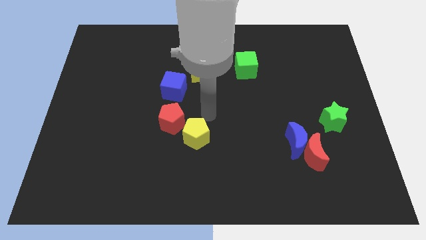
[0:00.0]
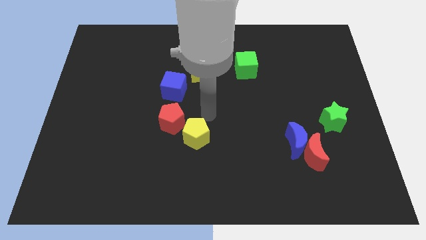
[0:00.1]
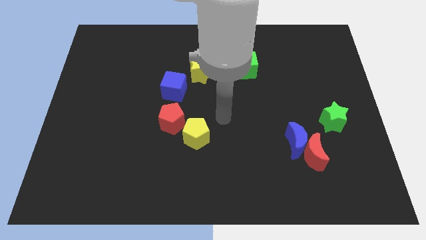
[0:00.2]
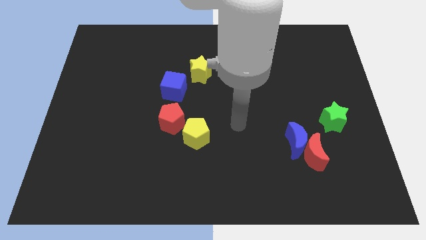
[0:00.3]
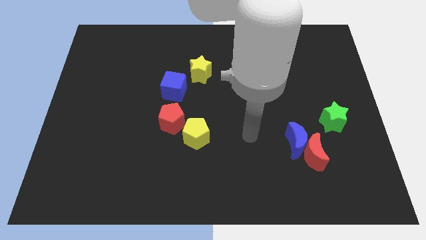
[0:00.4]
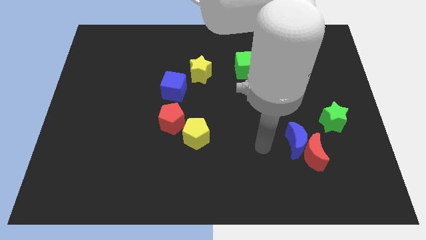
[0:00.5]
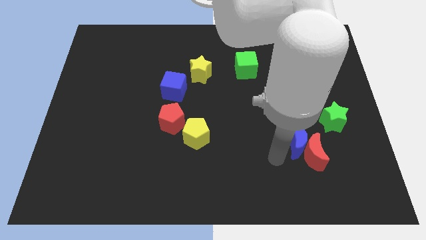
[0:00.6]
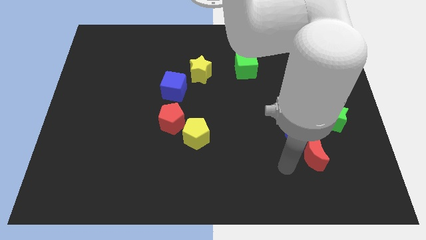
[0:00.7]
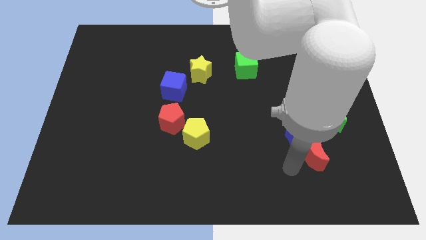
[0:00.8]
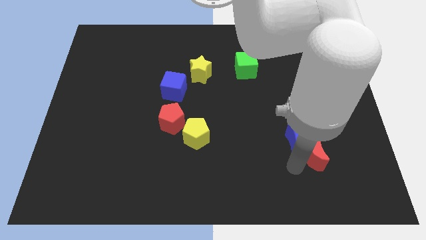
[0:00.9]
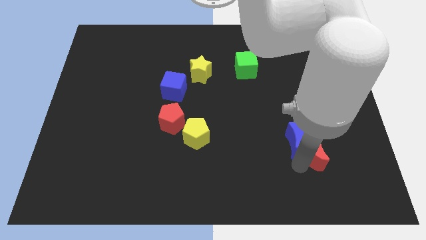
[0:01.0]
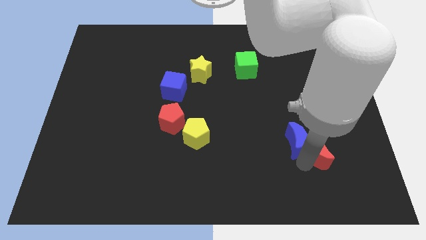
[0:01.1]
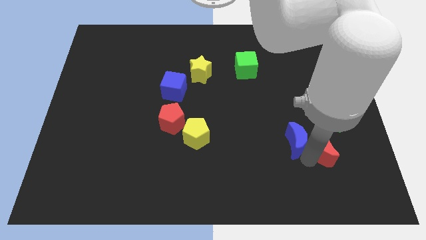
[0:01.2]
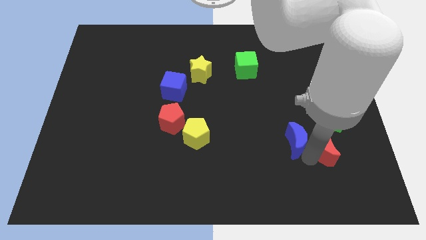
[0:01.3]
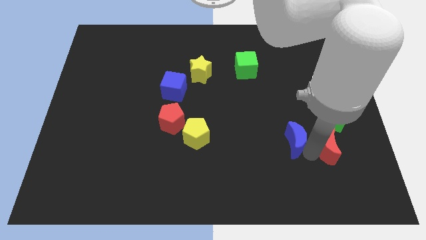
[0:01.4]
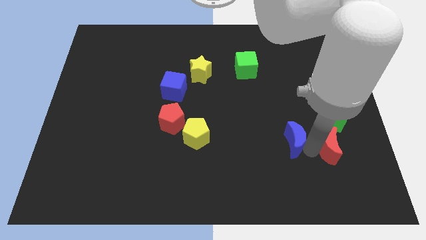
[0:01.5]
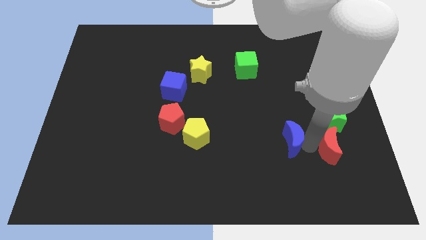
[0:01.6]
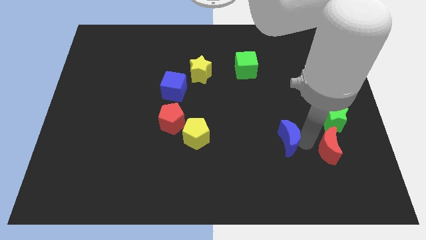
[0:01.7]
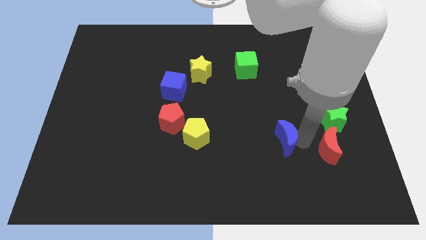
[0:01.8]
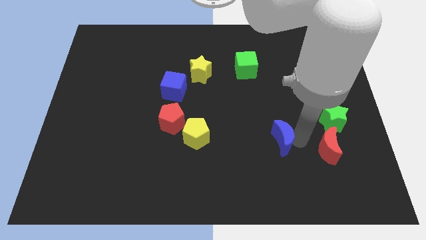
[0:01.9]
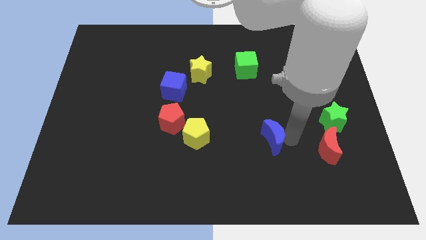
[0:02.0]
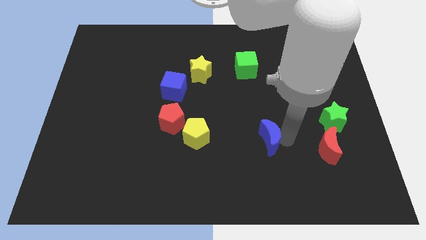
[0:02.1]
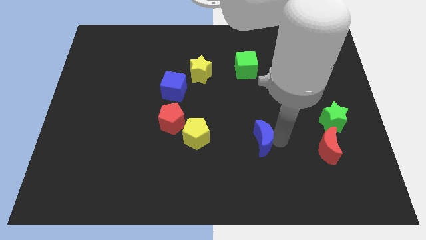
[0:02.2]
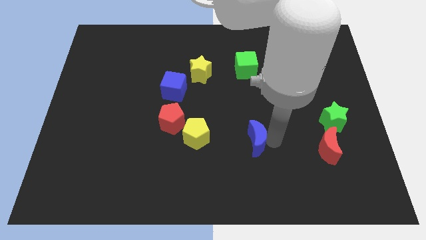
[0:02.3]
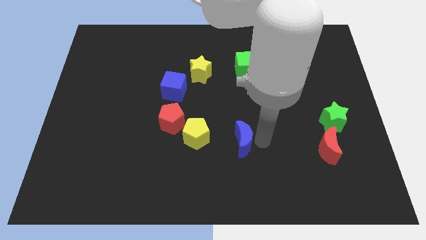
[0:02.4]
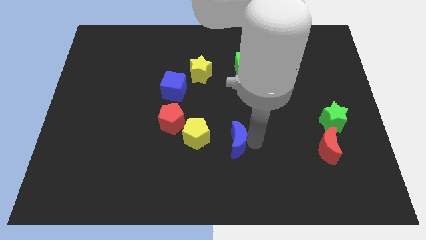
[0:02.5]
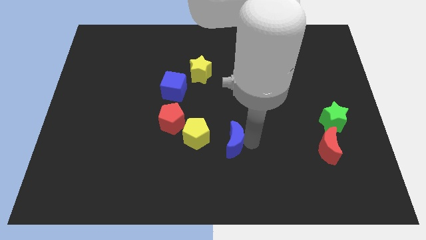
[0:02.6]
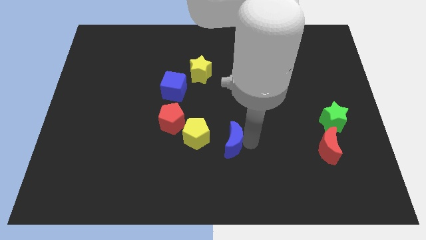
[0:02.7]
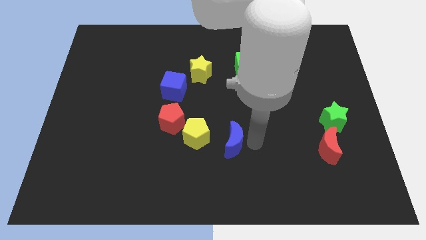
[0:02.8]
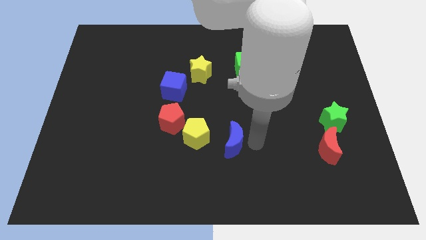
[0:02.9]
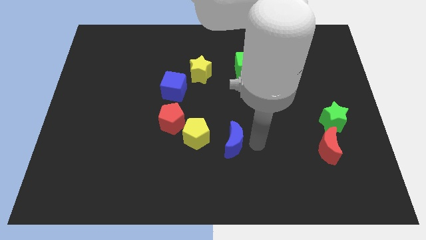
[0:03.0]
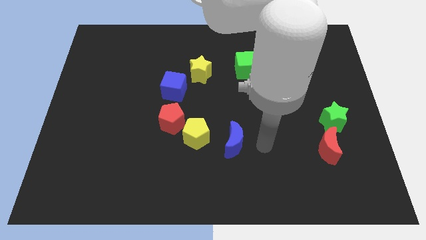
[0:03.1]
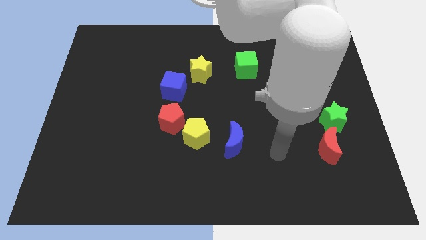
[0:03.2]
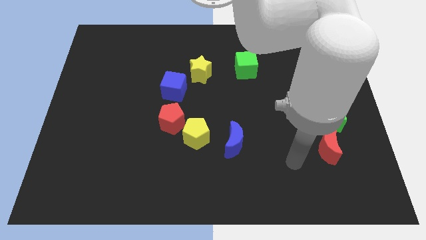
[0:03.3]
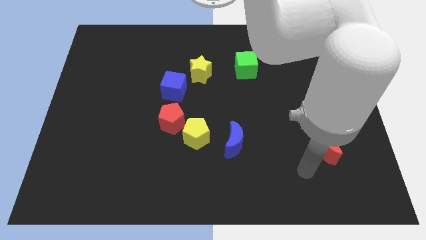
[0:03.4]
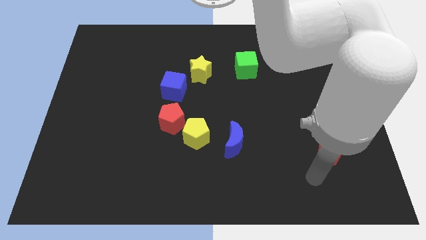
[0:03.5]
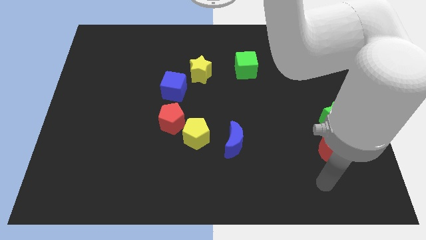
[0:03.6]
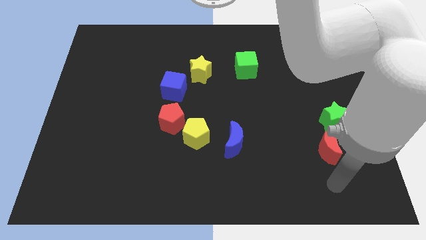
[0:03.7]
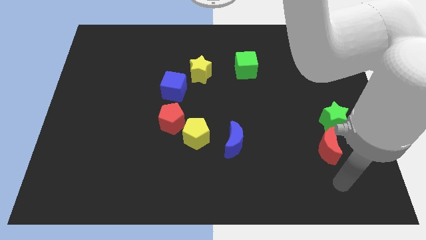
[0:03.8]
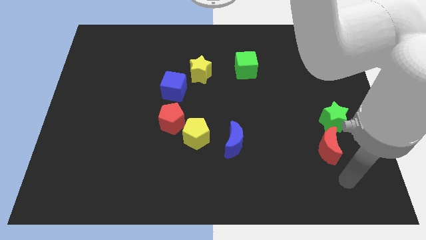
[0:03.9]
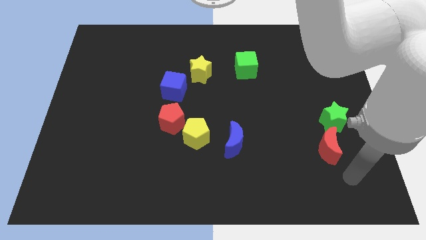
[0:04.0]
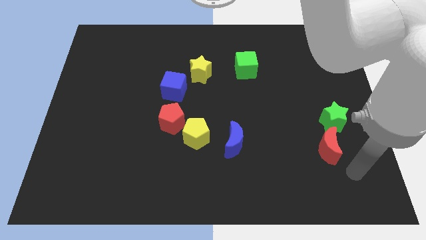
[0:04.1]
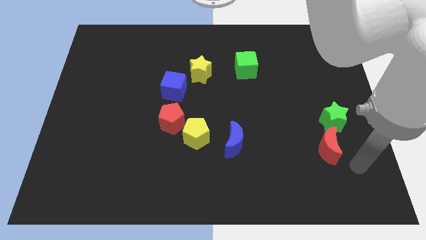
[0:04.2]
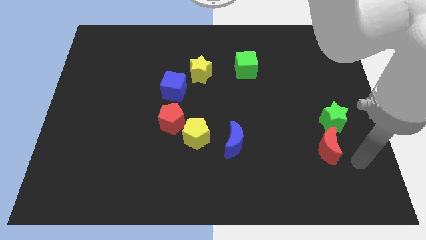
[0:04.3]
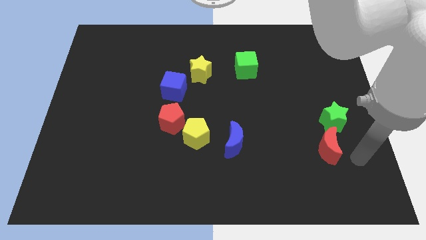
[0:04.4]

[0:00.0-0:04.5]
move away from the yellow pentagon

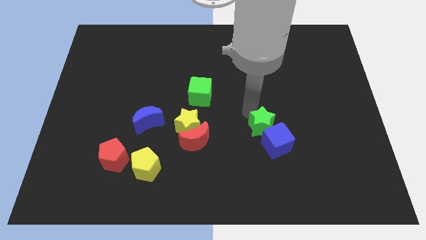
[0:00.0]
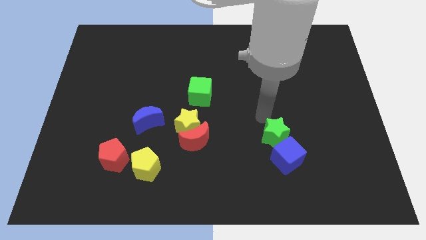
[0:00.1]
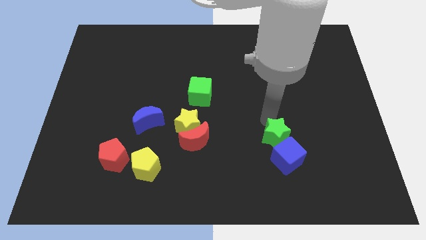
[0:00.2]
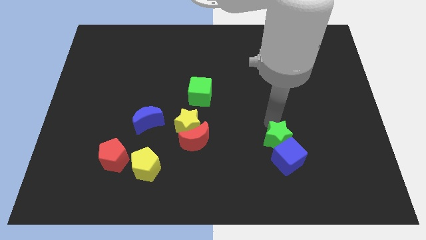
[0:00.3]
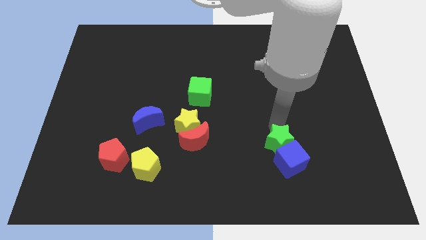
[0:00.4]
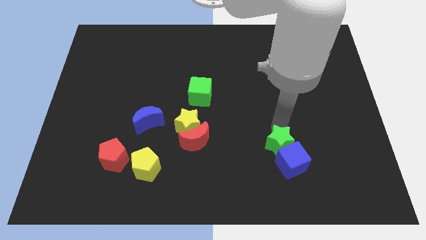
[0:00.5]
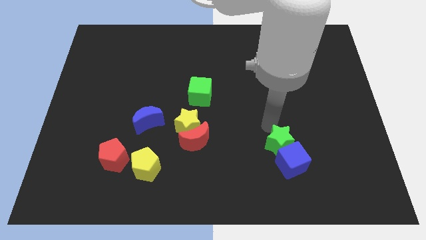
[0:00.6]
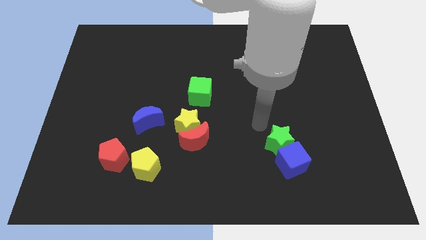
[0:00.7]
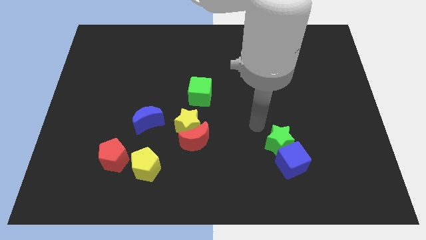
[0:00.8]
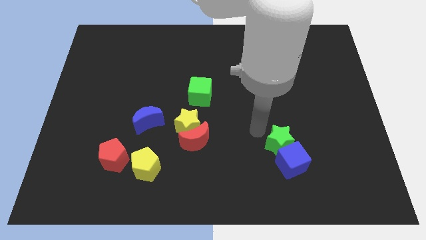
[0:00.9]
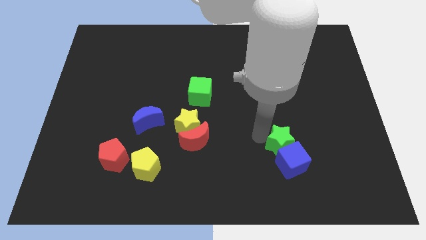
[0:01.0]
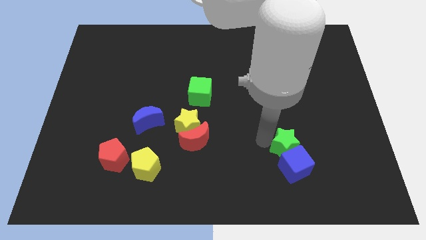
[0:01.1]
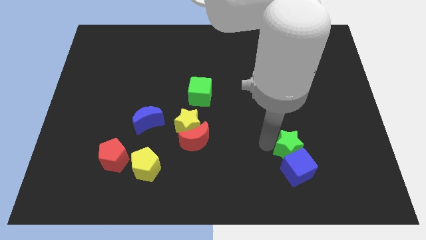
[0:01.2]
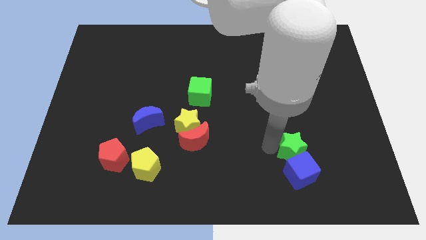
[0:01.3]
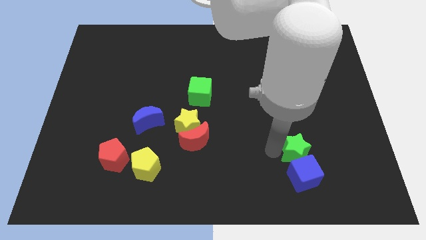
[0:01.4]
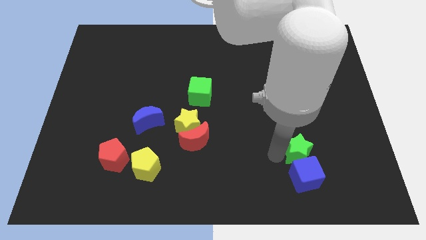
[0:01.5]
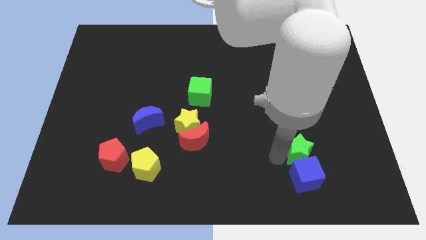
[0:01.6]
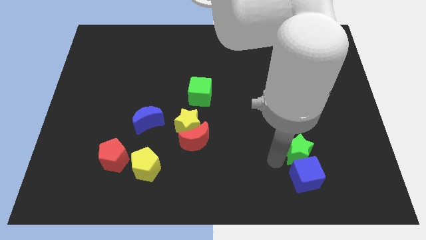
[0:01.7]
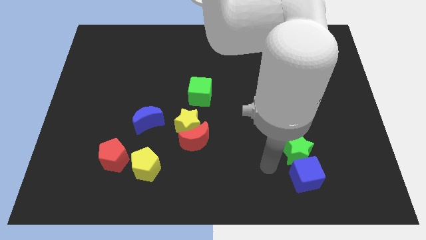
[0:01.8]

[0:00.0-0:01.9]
push green star and blue block together

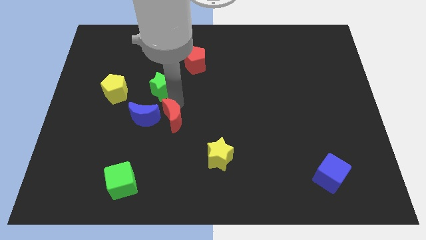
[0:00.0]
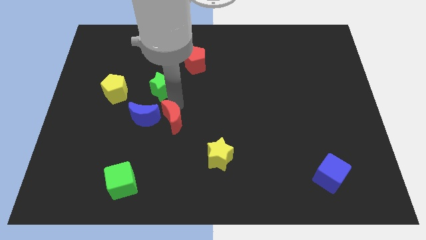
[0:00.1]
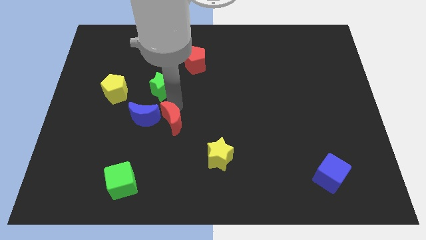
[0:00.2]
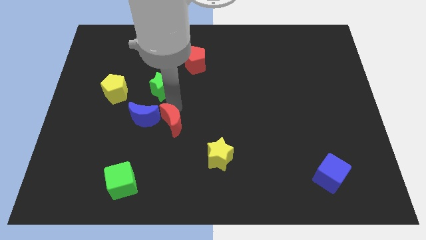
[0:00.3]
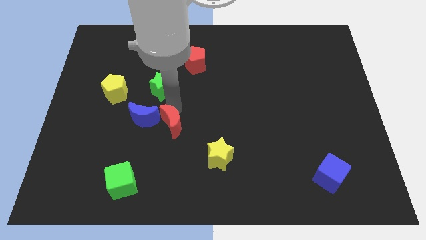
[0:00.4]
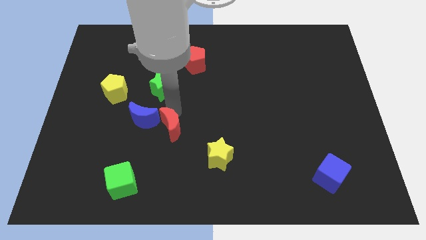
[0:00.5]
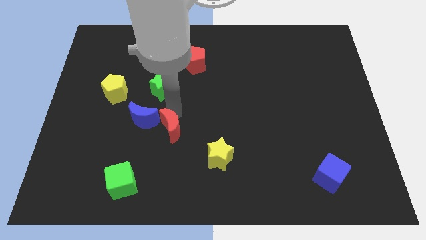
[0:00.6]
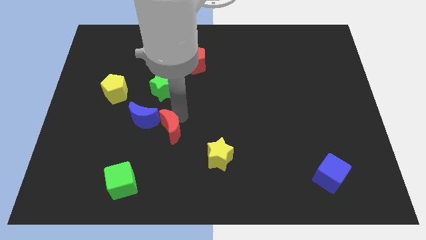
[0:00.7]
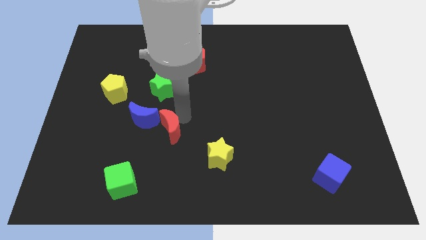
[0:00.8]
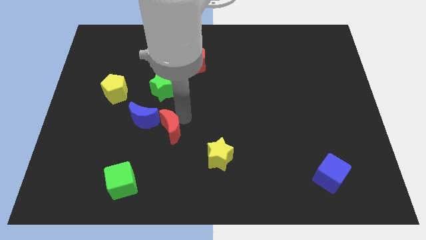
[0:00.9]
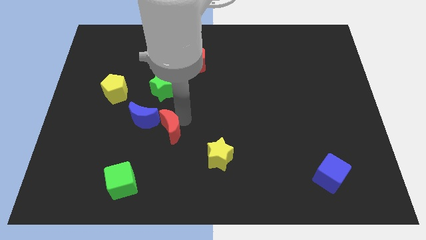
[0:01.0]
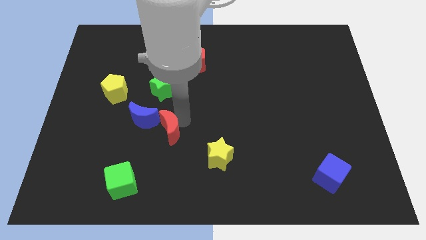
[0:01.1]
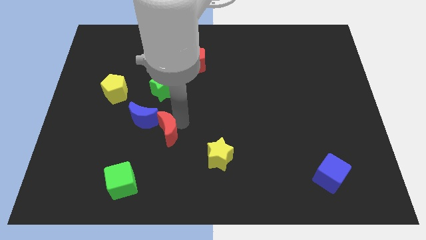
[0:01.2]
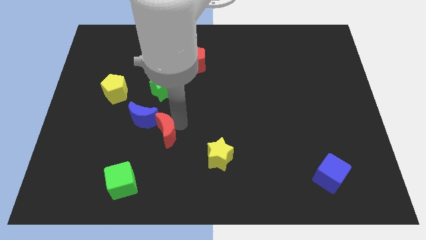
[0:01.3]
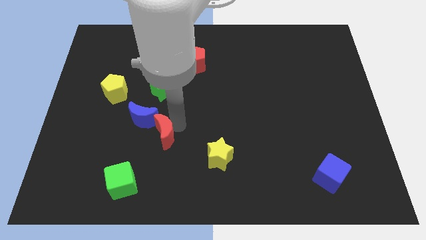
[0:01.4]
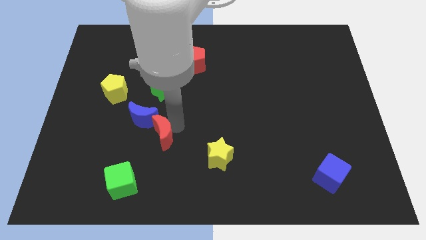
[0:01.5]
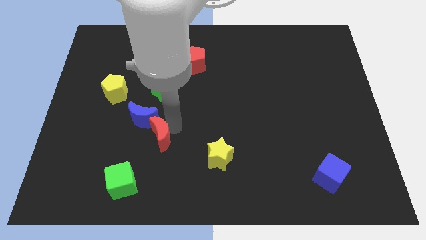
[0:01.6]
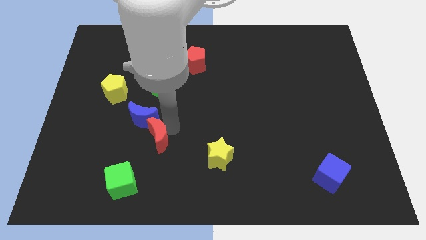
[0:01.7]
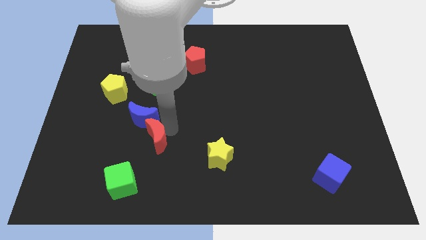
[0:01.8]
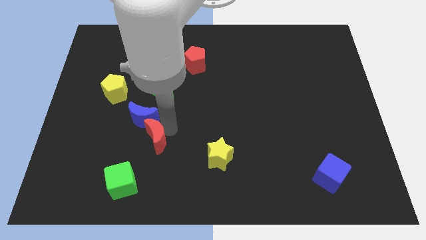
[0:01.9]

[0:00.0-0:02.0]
push the red crescent diagonally bottom right to the blue moon

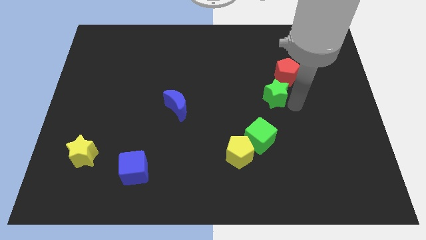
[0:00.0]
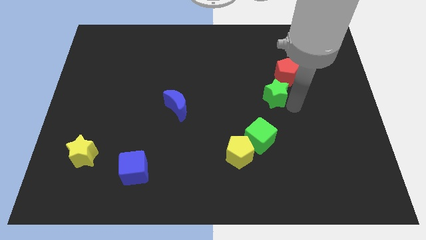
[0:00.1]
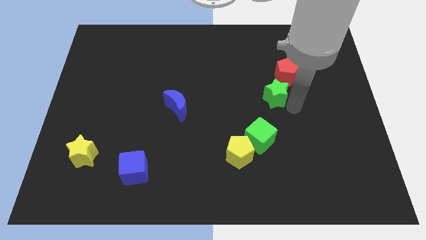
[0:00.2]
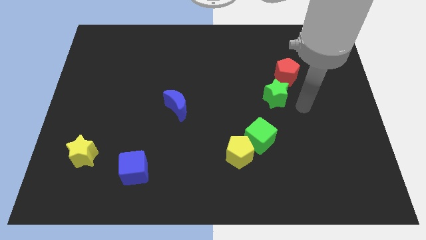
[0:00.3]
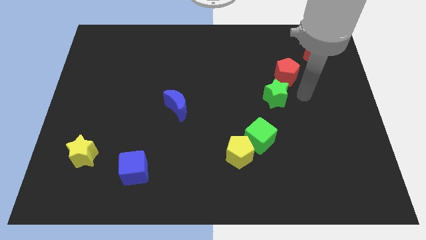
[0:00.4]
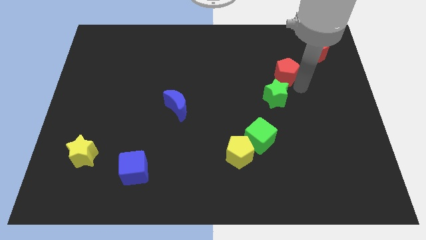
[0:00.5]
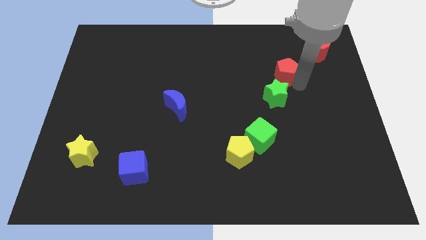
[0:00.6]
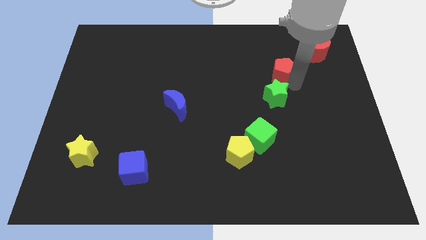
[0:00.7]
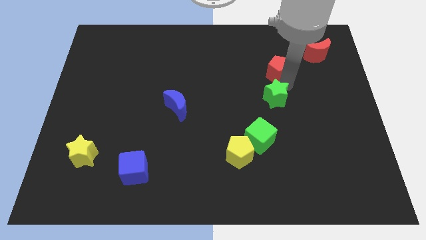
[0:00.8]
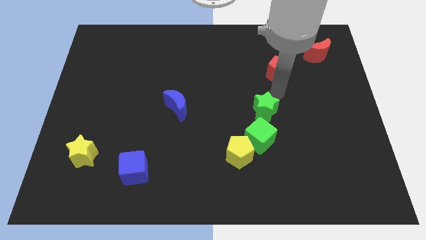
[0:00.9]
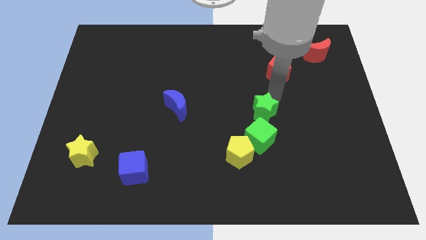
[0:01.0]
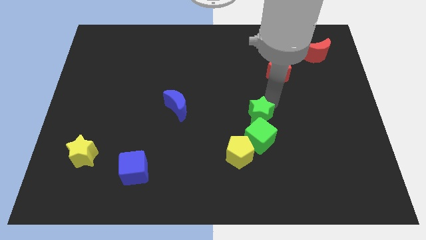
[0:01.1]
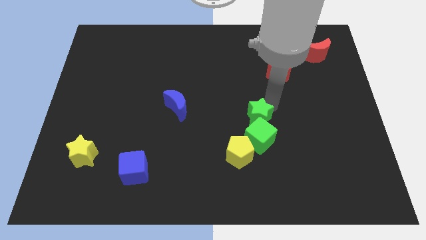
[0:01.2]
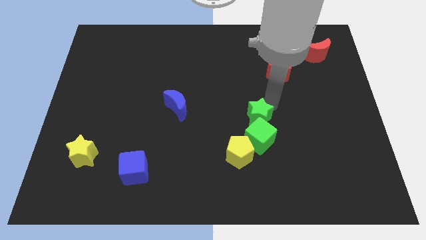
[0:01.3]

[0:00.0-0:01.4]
push the green star and red pentagon in opposite directions
